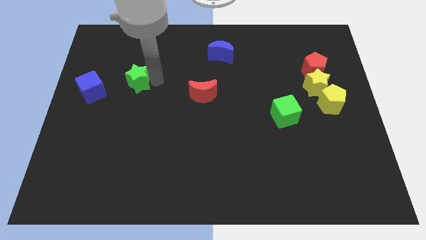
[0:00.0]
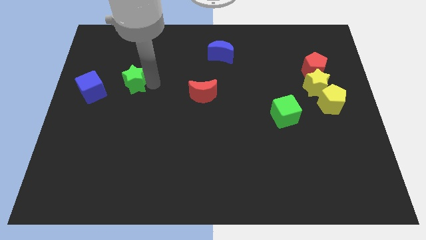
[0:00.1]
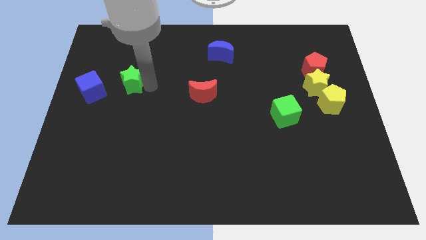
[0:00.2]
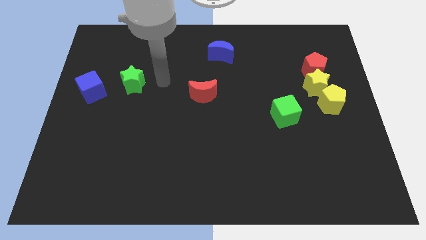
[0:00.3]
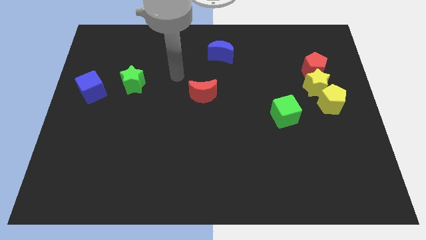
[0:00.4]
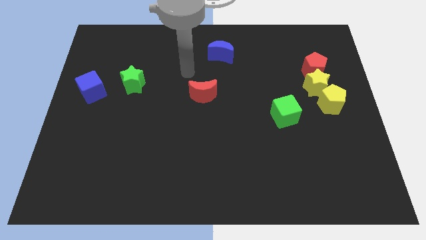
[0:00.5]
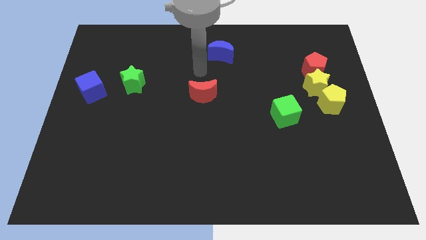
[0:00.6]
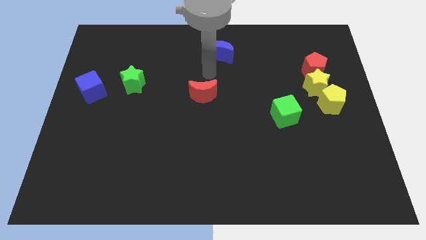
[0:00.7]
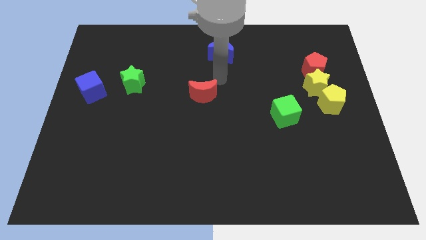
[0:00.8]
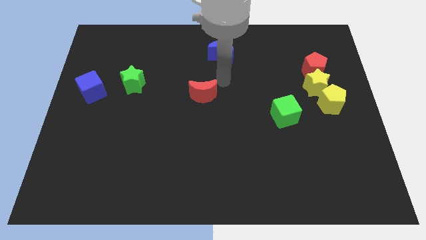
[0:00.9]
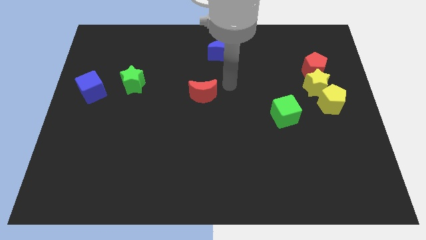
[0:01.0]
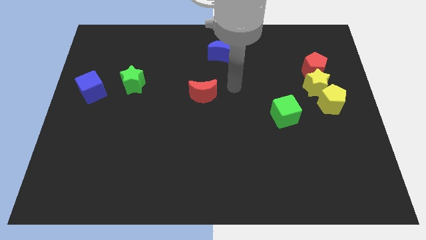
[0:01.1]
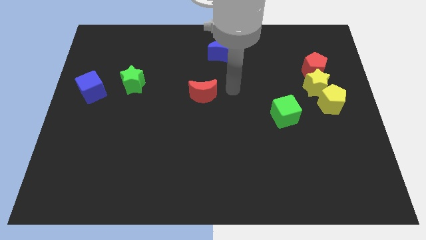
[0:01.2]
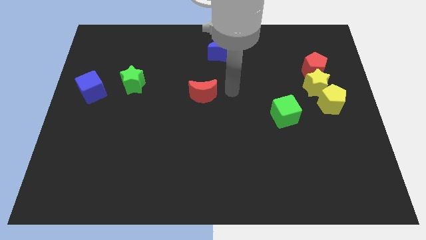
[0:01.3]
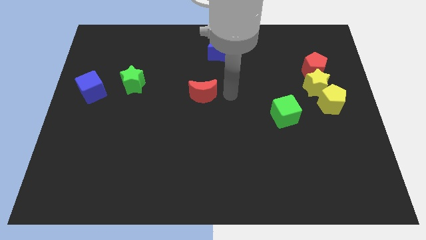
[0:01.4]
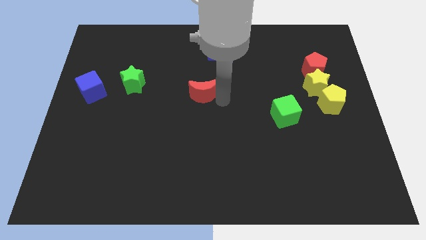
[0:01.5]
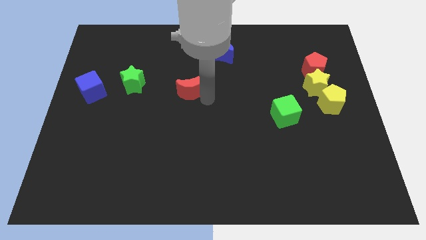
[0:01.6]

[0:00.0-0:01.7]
move red crescent towards green star

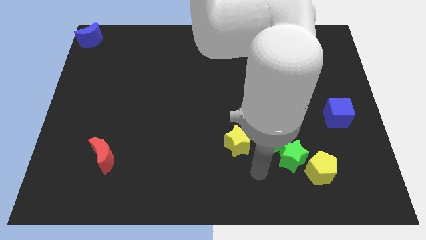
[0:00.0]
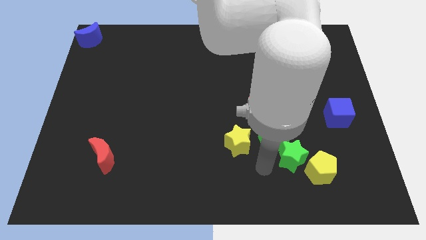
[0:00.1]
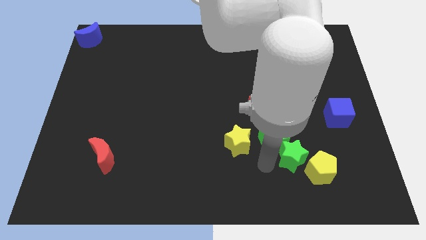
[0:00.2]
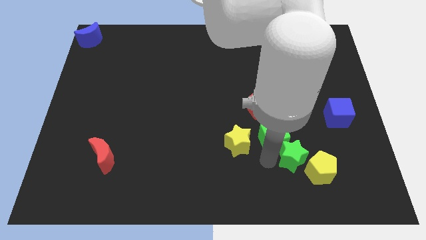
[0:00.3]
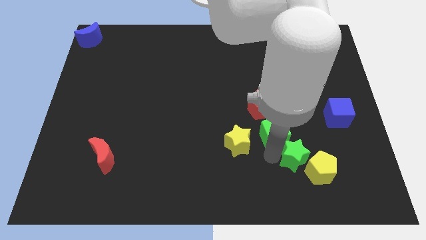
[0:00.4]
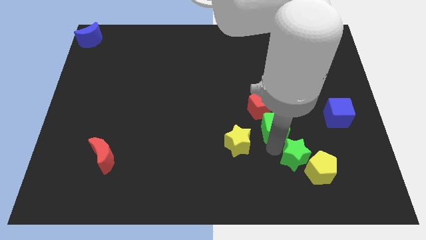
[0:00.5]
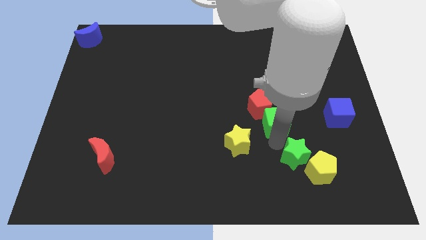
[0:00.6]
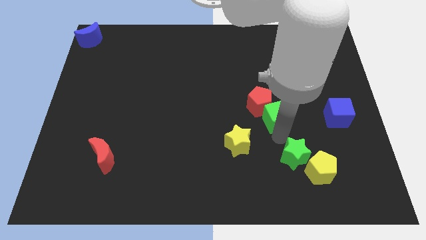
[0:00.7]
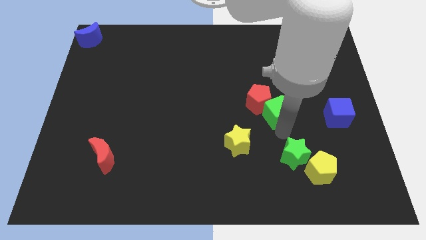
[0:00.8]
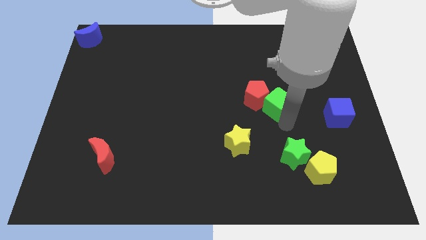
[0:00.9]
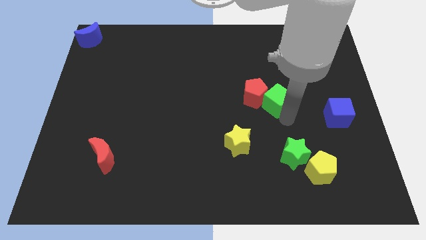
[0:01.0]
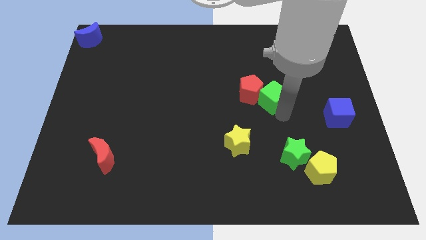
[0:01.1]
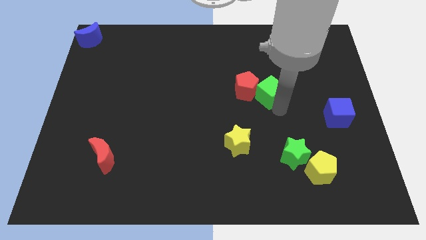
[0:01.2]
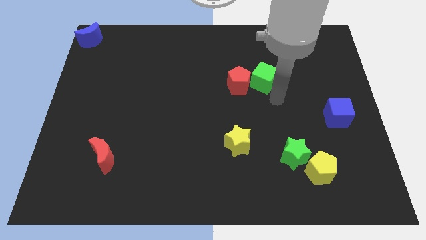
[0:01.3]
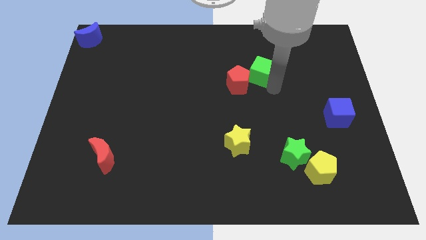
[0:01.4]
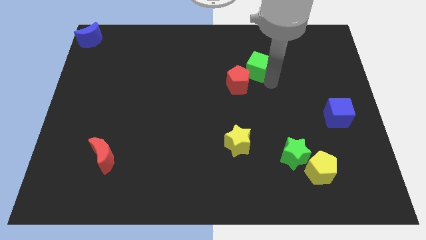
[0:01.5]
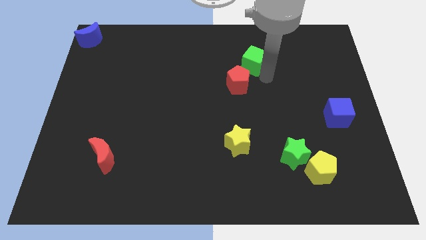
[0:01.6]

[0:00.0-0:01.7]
move the green cube away from the green star

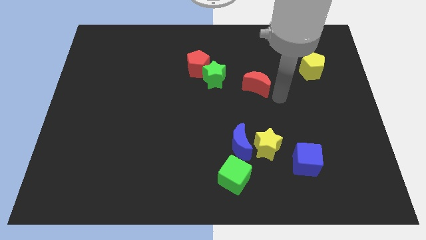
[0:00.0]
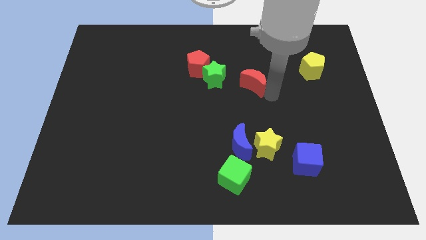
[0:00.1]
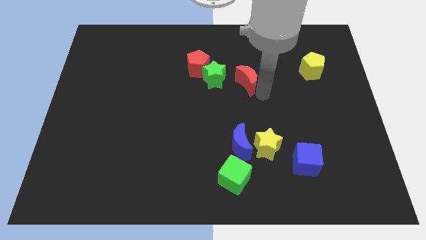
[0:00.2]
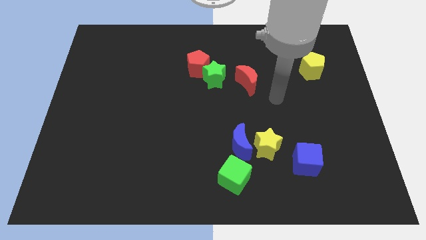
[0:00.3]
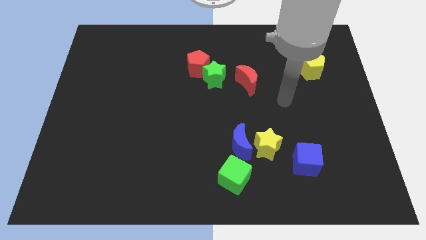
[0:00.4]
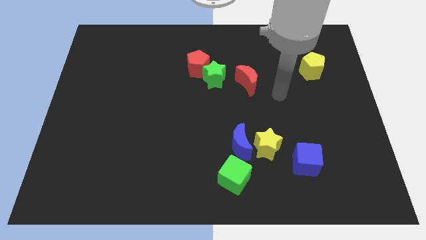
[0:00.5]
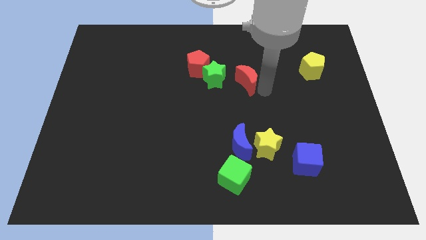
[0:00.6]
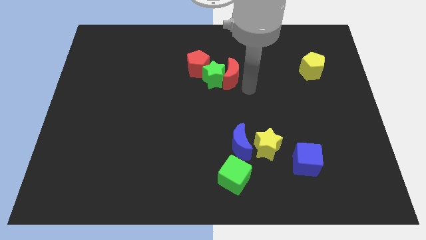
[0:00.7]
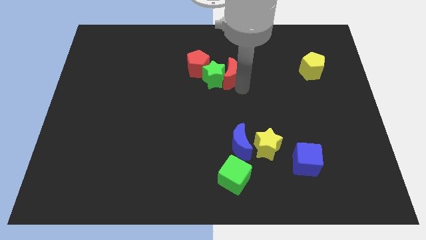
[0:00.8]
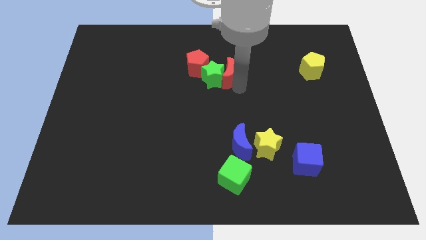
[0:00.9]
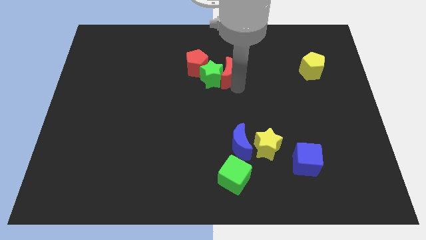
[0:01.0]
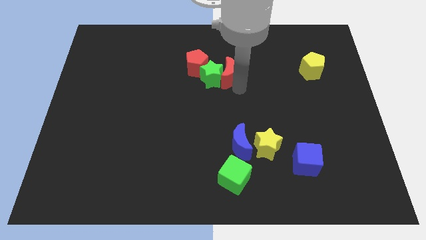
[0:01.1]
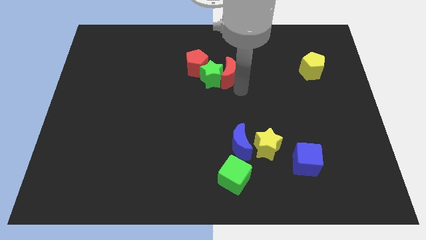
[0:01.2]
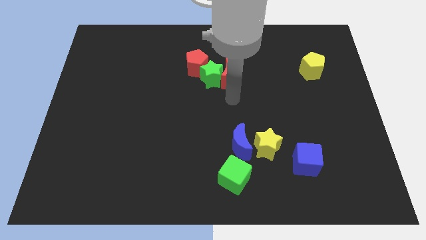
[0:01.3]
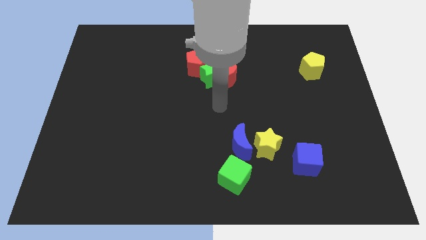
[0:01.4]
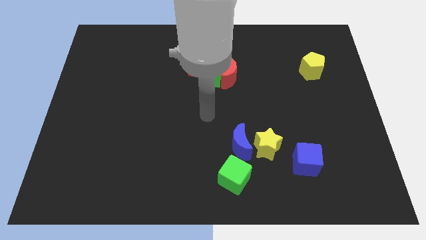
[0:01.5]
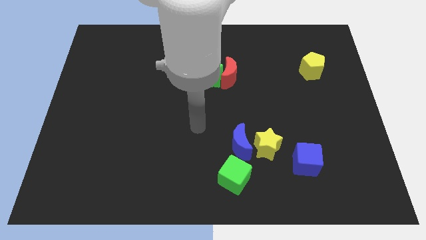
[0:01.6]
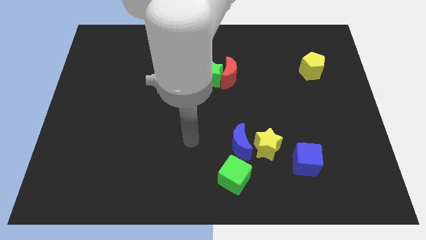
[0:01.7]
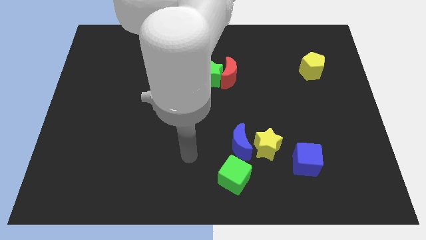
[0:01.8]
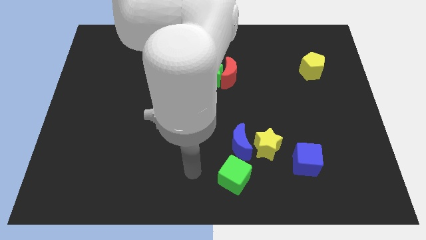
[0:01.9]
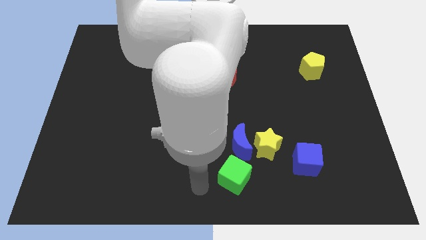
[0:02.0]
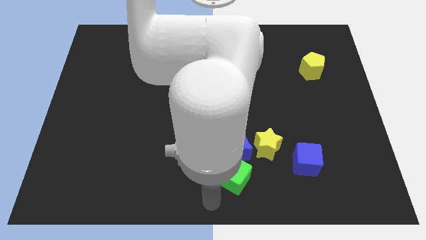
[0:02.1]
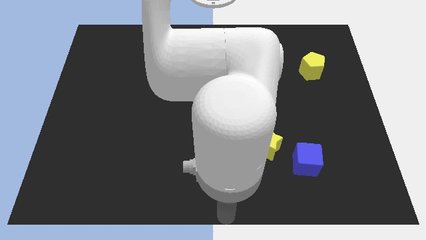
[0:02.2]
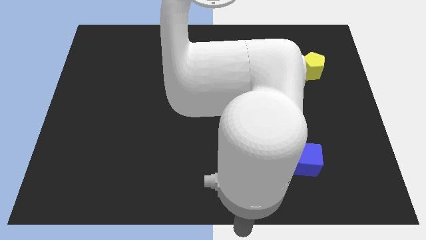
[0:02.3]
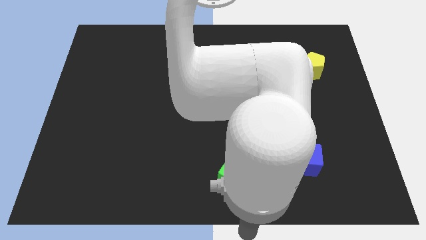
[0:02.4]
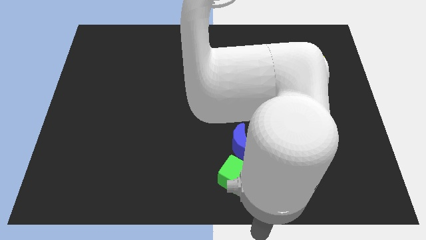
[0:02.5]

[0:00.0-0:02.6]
push the red crescent into the green star

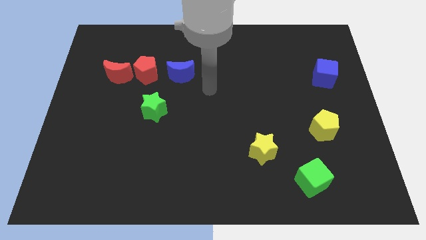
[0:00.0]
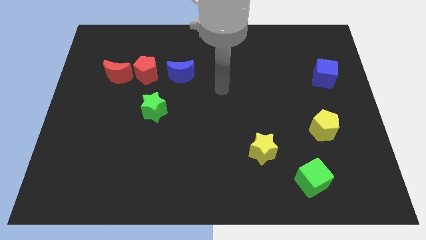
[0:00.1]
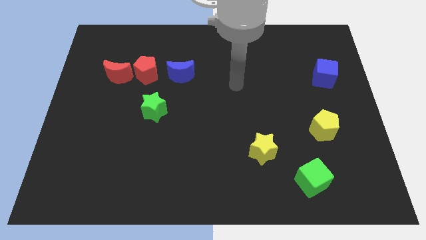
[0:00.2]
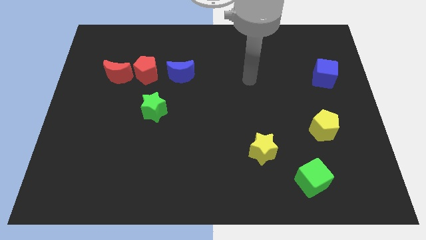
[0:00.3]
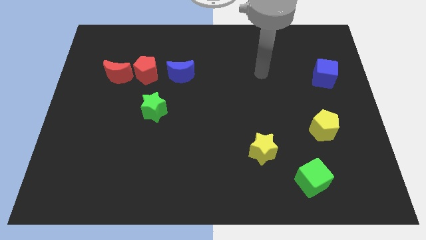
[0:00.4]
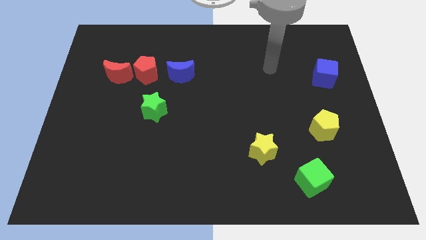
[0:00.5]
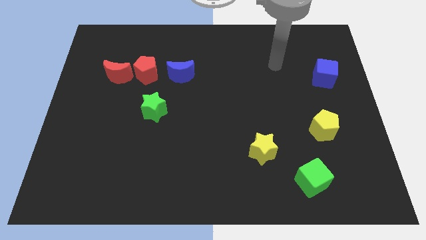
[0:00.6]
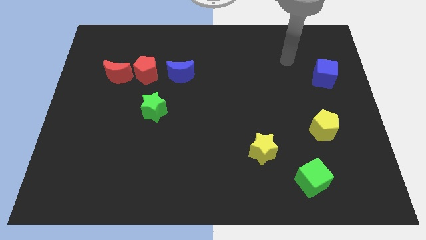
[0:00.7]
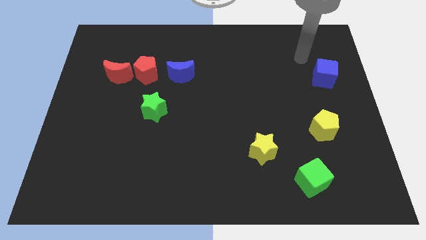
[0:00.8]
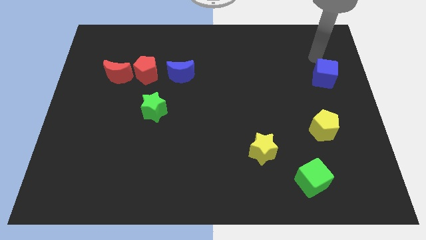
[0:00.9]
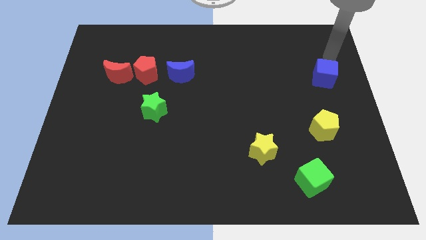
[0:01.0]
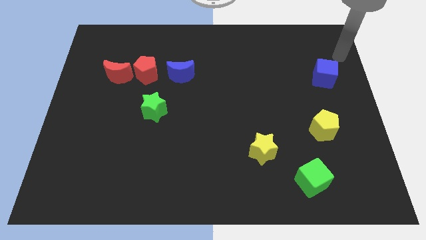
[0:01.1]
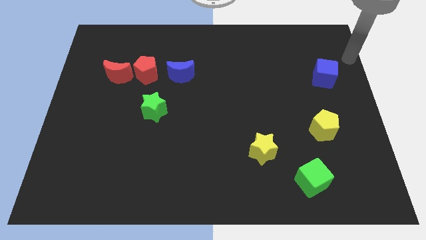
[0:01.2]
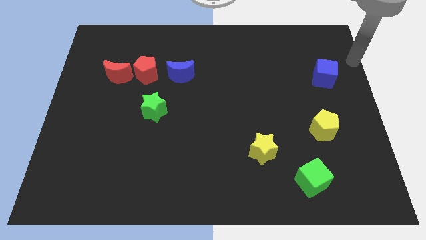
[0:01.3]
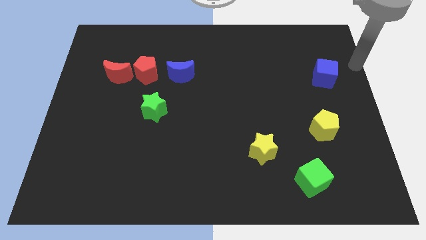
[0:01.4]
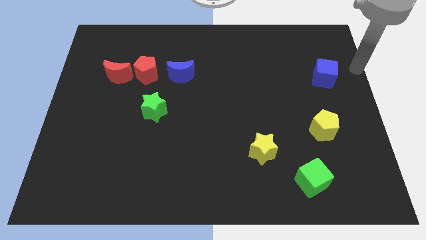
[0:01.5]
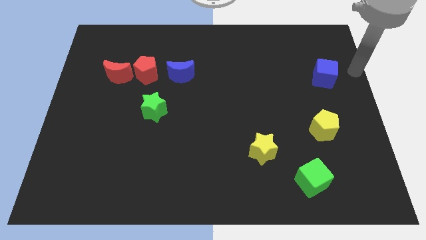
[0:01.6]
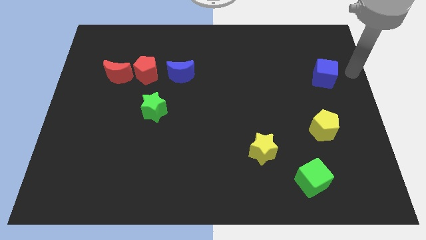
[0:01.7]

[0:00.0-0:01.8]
place your hand at the right side of the blue cube

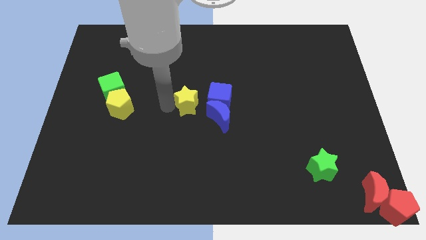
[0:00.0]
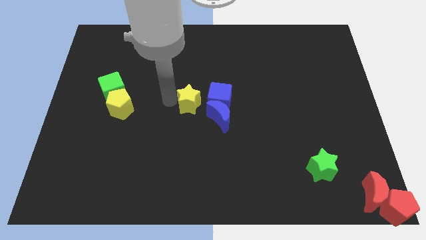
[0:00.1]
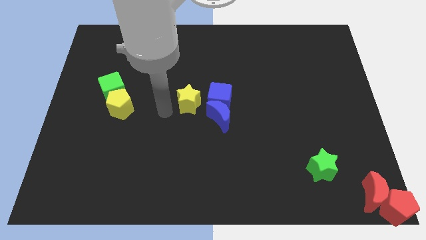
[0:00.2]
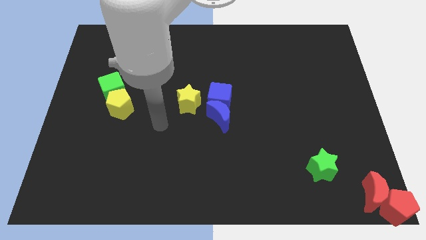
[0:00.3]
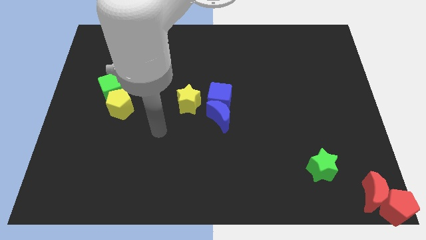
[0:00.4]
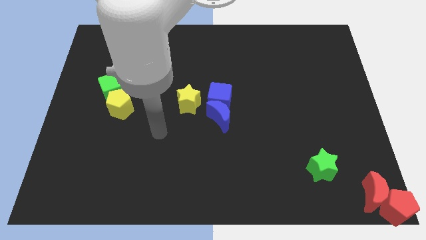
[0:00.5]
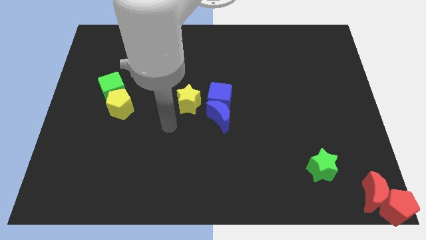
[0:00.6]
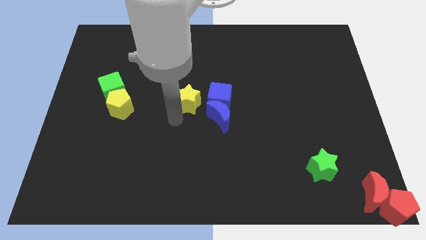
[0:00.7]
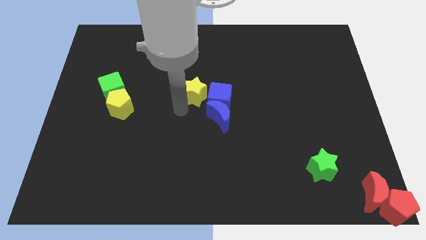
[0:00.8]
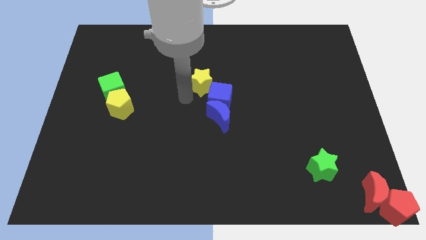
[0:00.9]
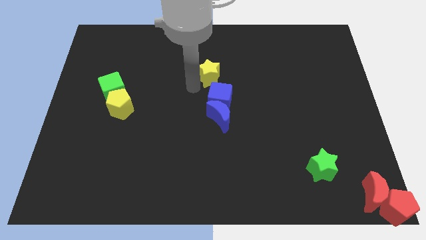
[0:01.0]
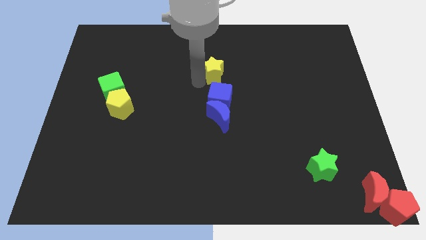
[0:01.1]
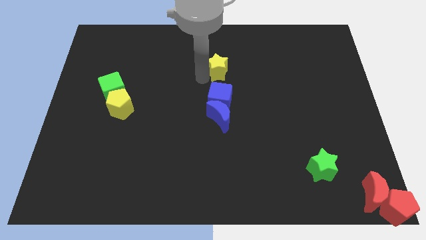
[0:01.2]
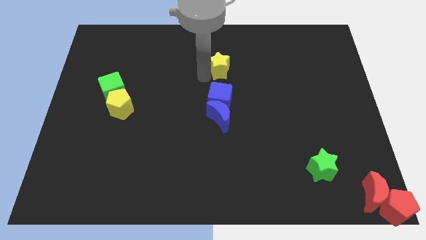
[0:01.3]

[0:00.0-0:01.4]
place the yellow star above the blue cube

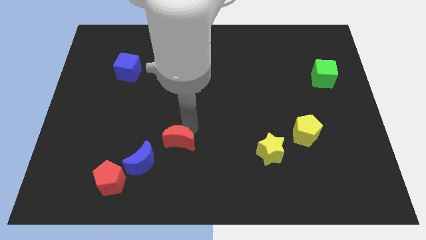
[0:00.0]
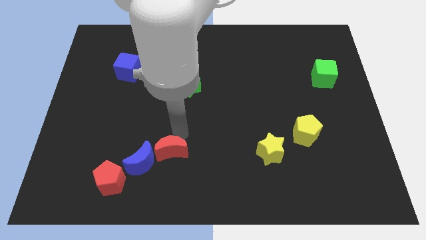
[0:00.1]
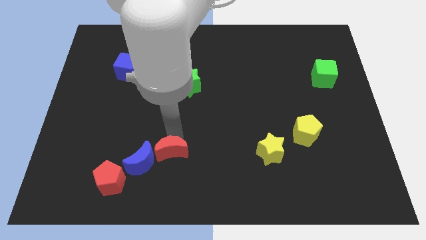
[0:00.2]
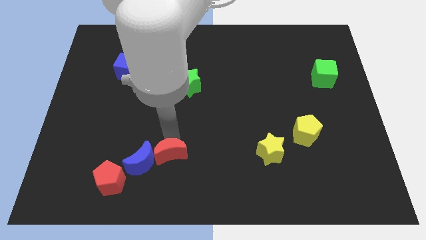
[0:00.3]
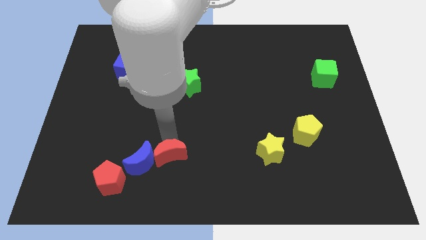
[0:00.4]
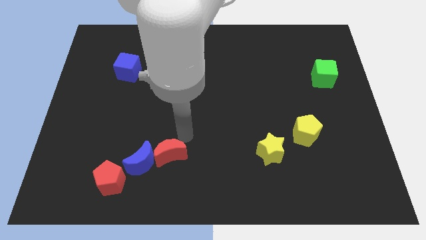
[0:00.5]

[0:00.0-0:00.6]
place the red crescent to the right side of the blue crescent
